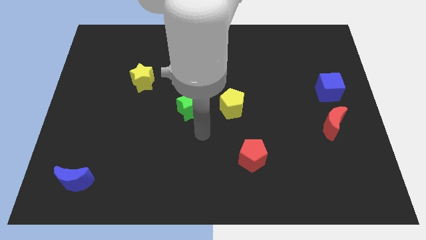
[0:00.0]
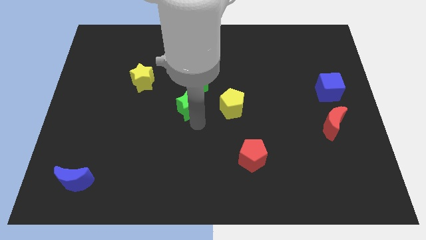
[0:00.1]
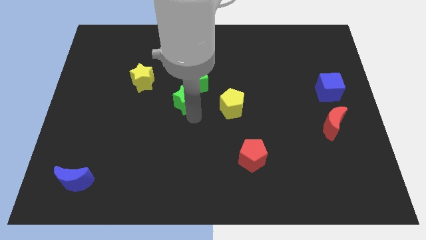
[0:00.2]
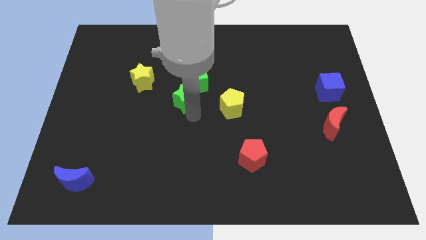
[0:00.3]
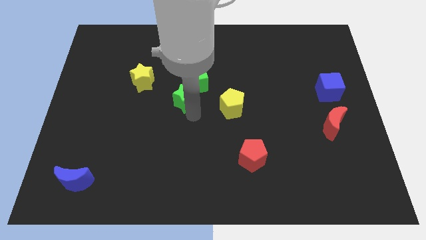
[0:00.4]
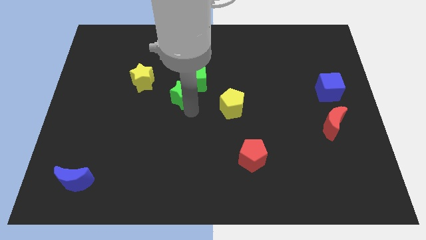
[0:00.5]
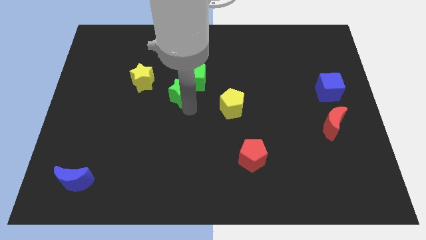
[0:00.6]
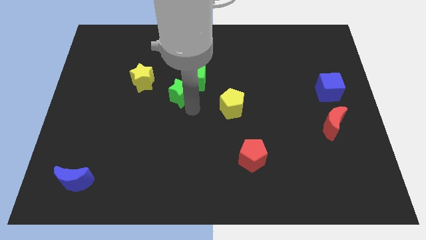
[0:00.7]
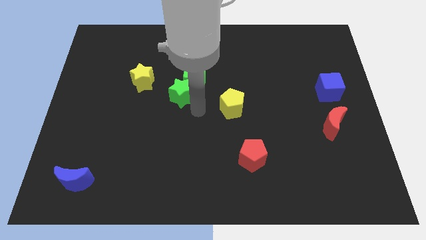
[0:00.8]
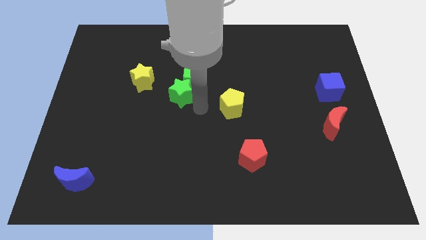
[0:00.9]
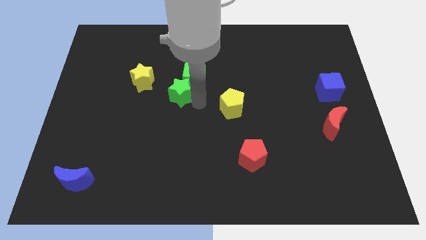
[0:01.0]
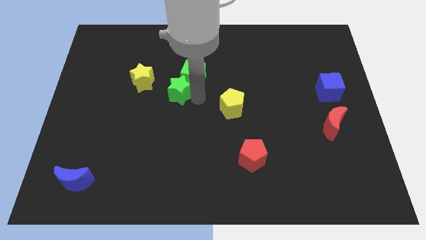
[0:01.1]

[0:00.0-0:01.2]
push the green star into the green cube

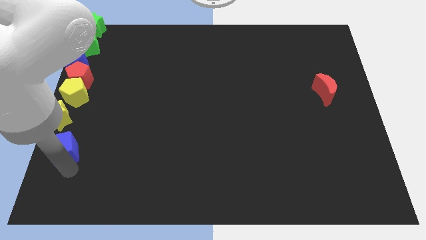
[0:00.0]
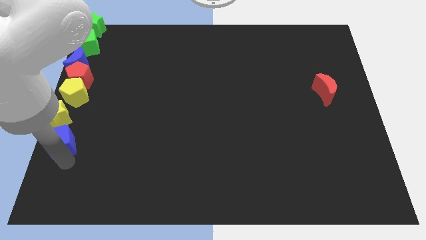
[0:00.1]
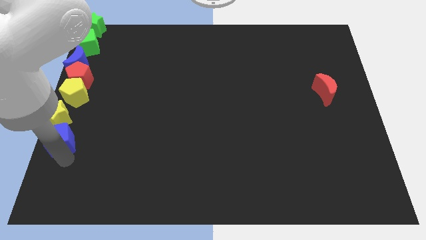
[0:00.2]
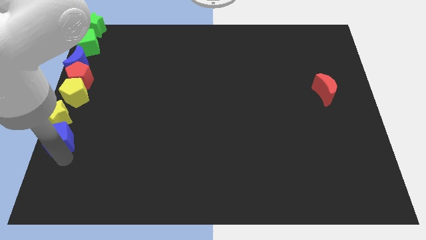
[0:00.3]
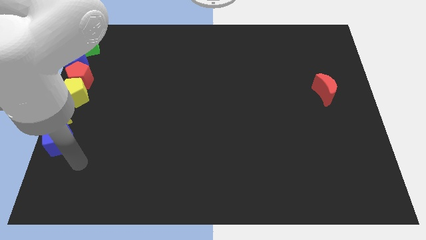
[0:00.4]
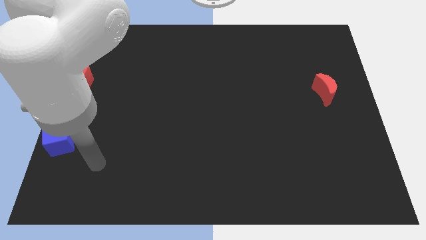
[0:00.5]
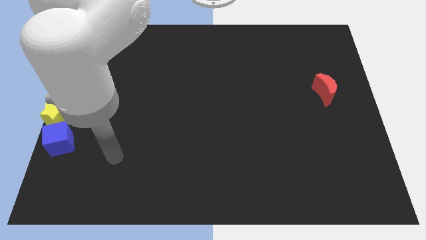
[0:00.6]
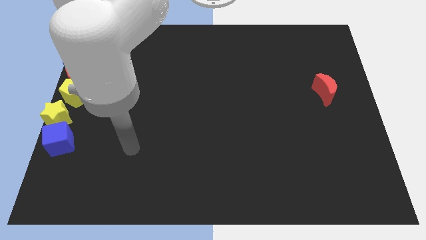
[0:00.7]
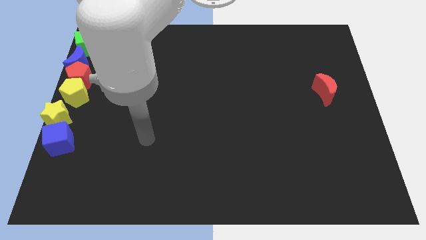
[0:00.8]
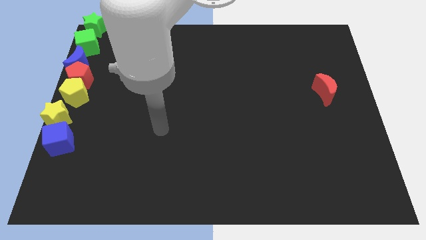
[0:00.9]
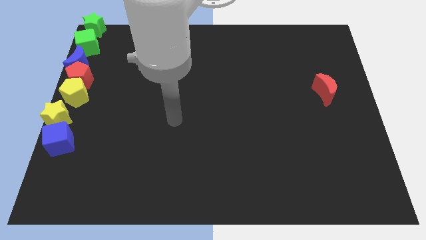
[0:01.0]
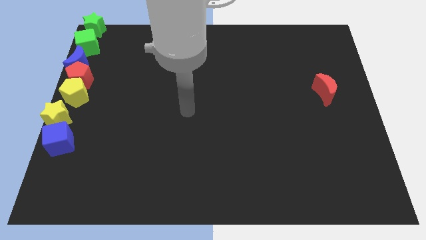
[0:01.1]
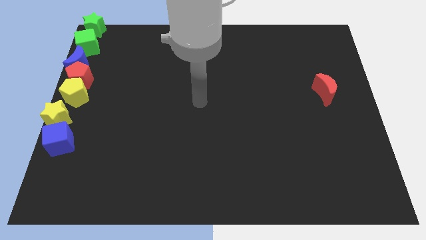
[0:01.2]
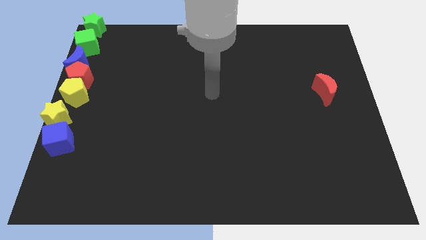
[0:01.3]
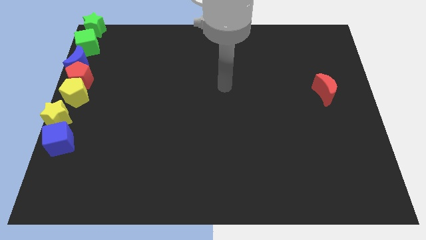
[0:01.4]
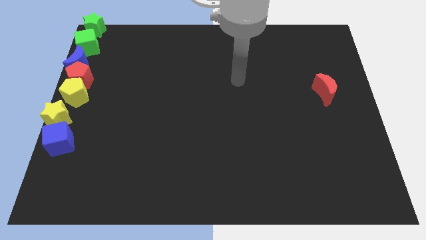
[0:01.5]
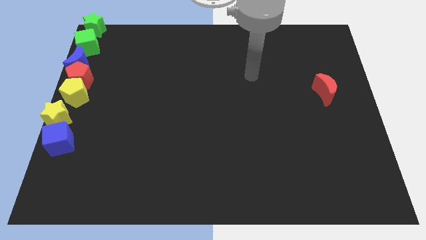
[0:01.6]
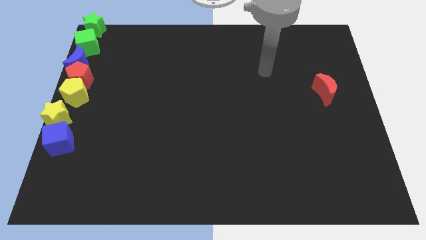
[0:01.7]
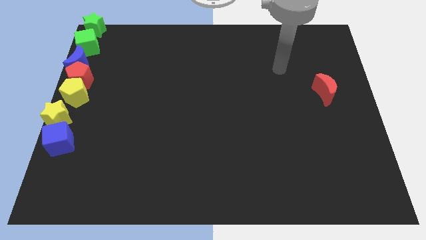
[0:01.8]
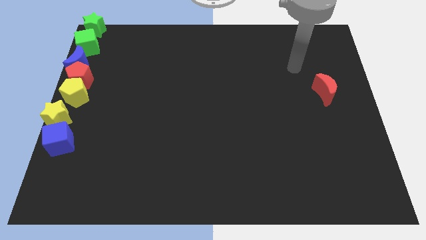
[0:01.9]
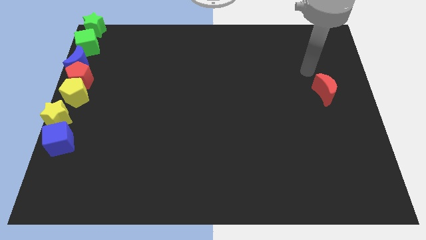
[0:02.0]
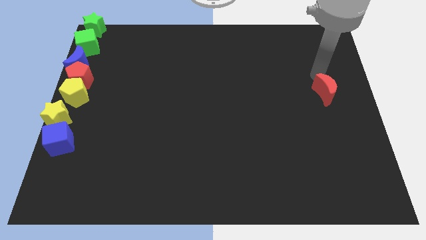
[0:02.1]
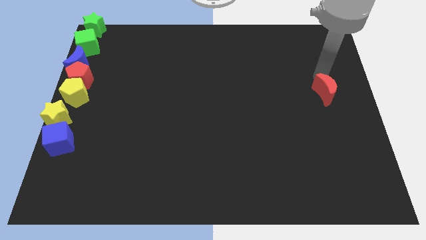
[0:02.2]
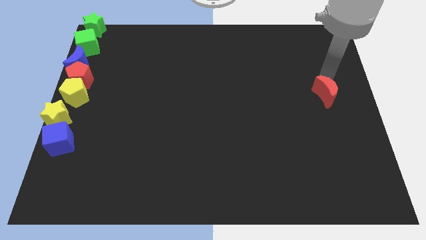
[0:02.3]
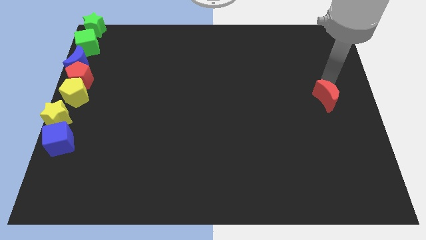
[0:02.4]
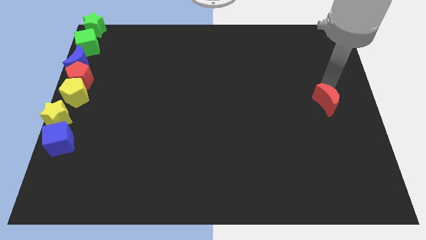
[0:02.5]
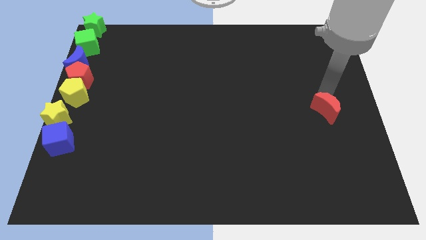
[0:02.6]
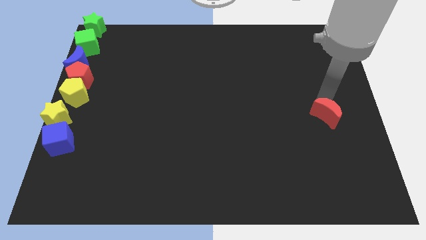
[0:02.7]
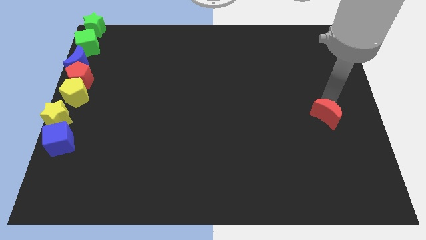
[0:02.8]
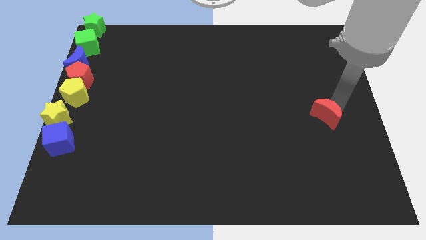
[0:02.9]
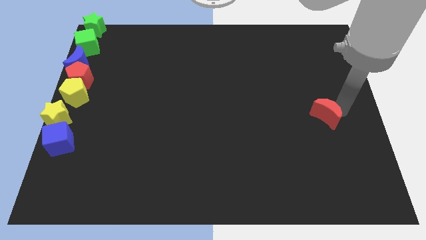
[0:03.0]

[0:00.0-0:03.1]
move the arm away from the blue cube

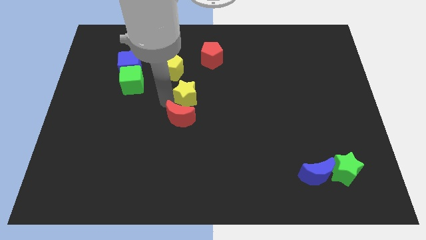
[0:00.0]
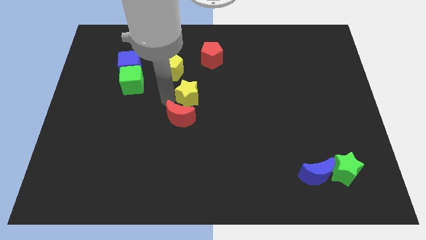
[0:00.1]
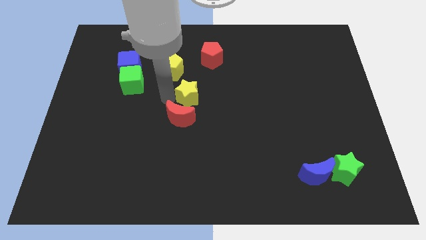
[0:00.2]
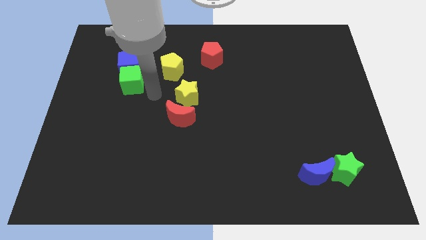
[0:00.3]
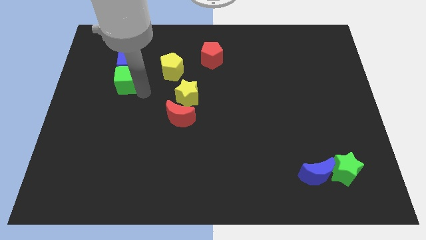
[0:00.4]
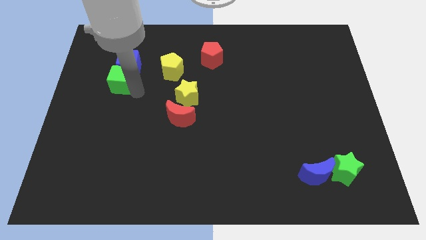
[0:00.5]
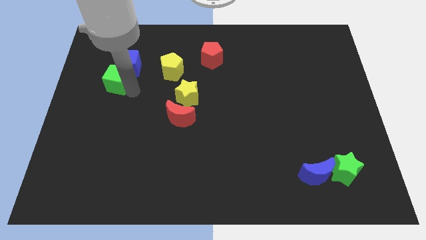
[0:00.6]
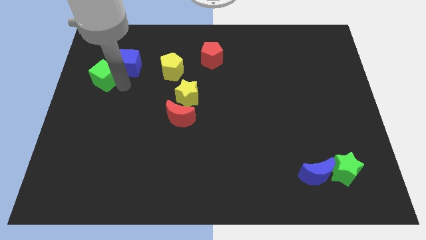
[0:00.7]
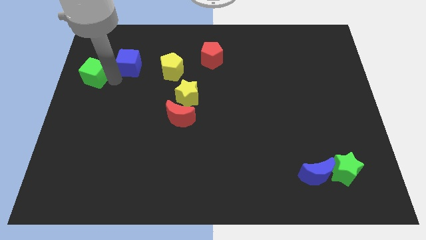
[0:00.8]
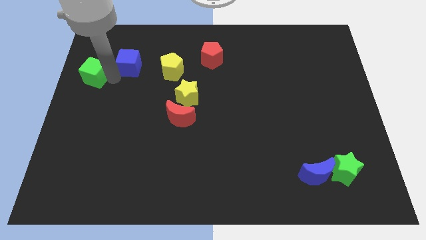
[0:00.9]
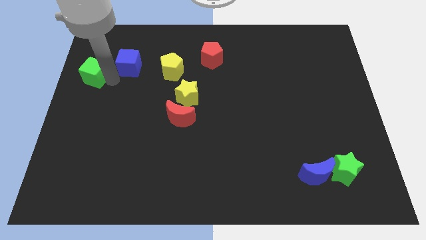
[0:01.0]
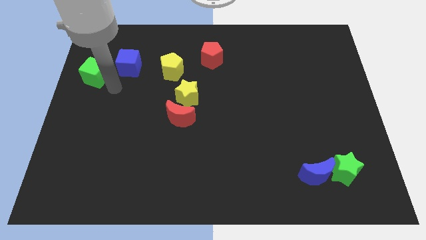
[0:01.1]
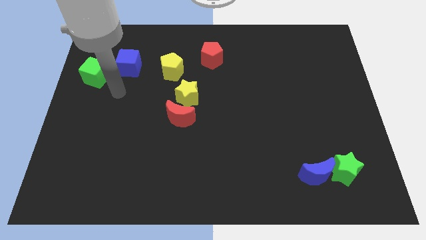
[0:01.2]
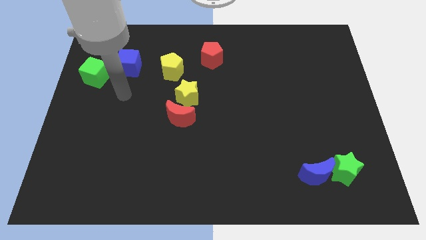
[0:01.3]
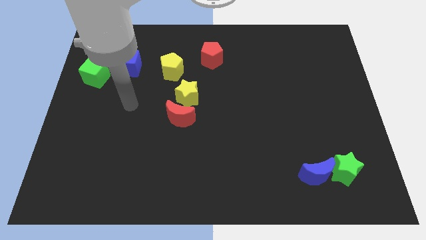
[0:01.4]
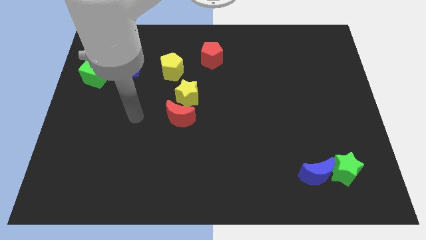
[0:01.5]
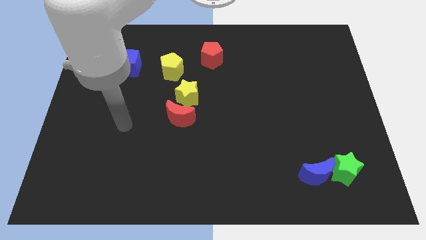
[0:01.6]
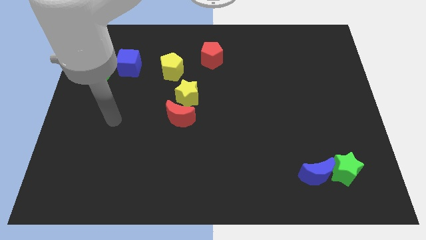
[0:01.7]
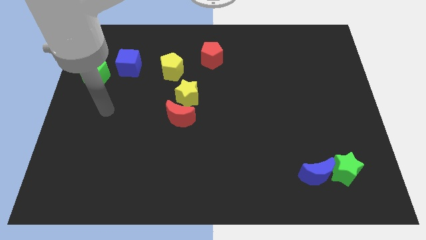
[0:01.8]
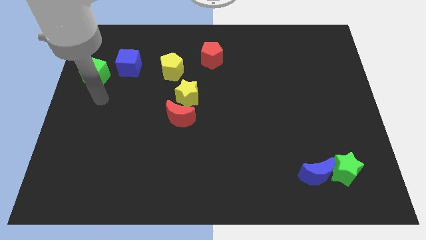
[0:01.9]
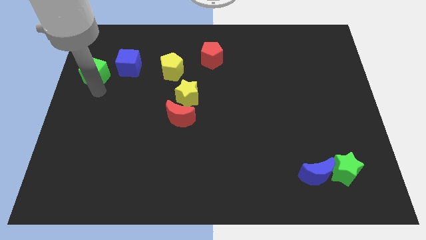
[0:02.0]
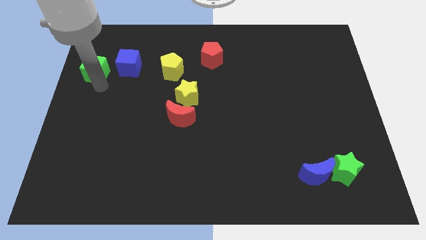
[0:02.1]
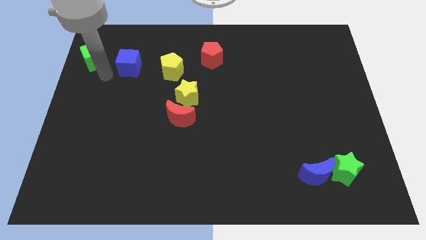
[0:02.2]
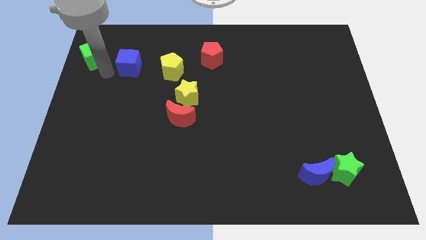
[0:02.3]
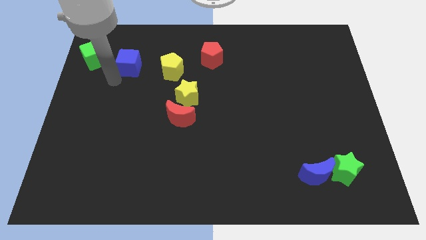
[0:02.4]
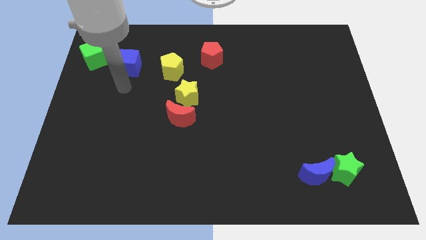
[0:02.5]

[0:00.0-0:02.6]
place green cube to the left of blue cube

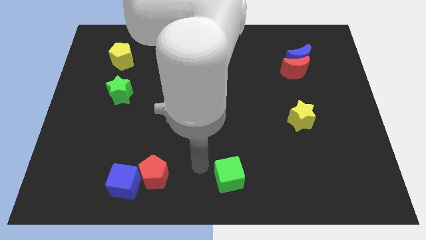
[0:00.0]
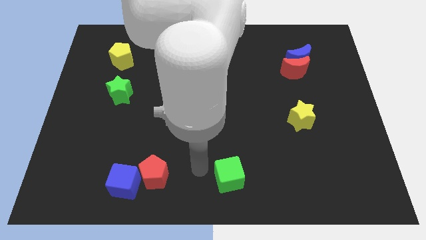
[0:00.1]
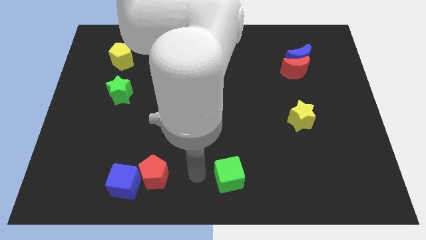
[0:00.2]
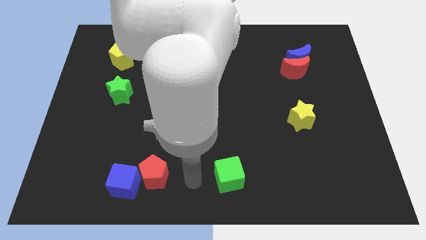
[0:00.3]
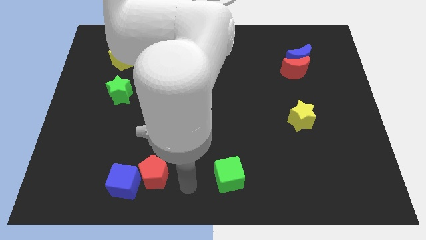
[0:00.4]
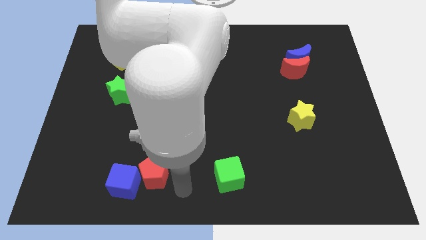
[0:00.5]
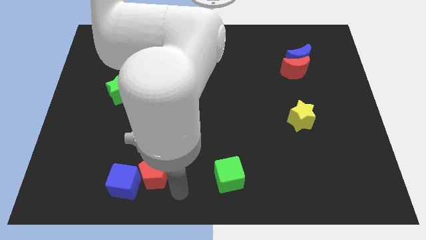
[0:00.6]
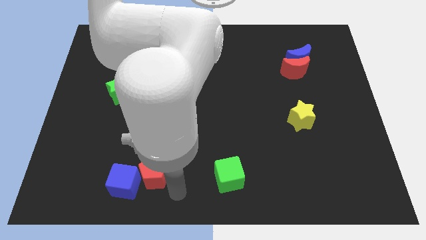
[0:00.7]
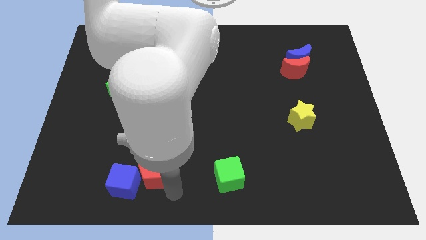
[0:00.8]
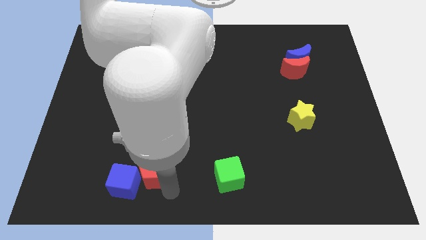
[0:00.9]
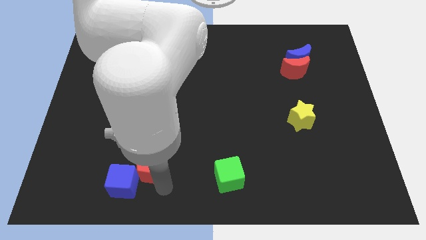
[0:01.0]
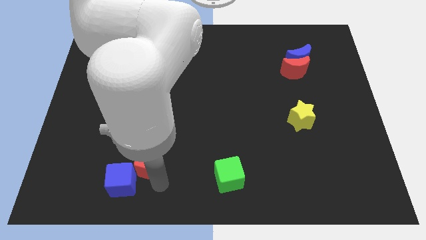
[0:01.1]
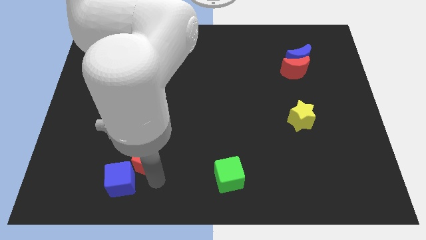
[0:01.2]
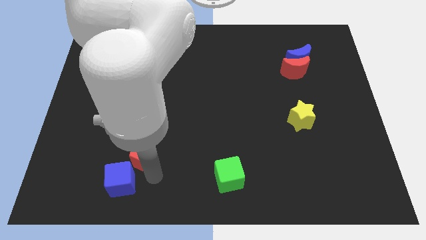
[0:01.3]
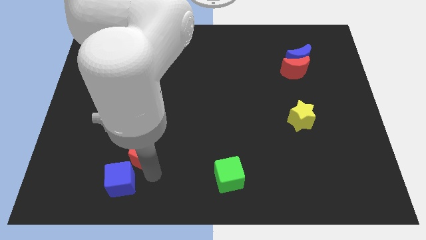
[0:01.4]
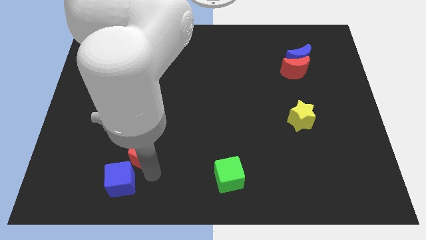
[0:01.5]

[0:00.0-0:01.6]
slightly move the red pentagon up

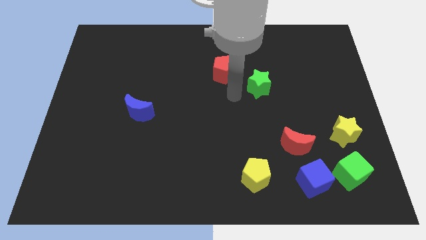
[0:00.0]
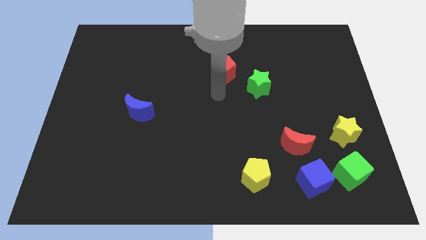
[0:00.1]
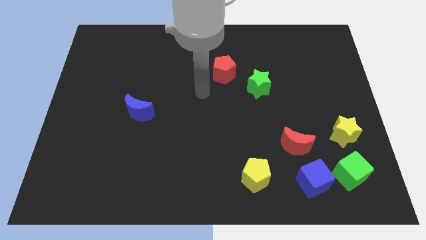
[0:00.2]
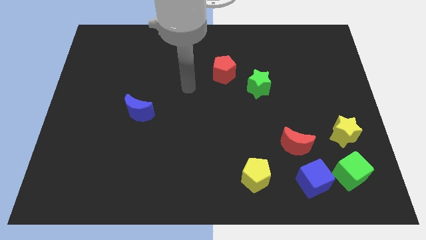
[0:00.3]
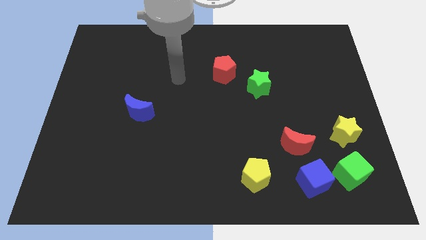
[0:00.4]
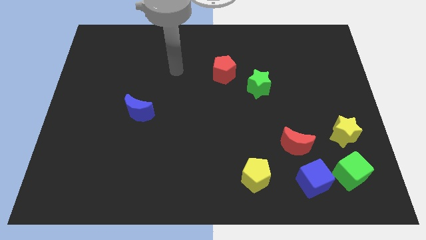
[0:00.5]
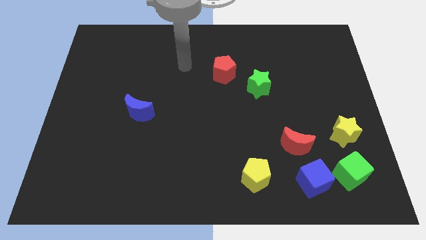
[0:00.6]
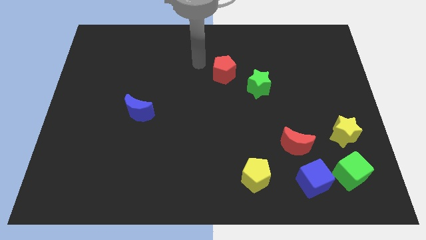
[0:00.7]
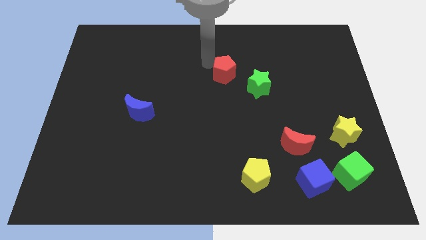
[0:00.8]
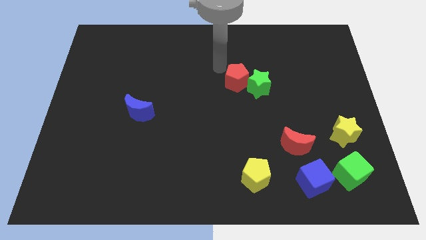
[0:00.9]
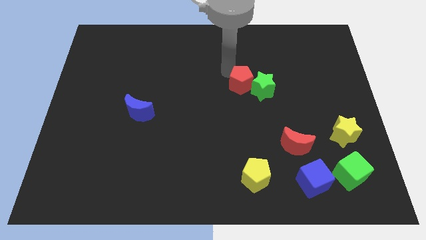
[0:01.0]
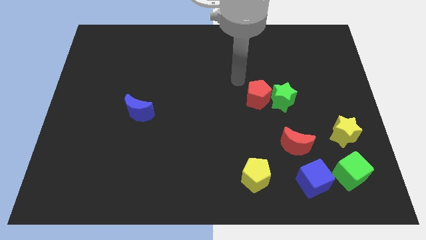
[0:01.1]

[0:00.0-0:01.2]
move the red pentagon into the green star
